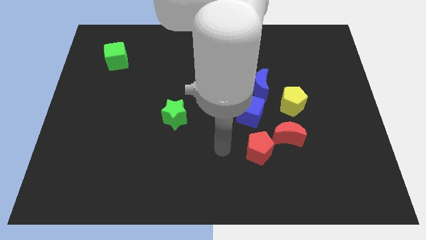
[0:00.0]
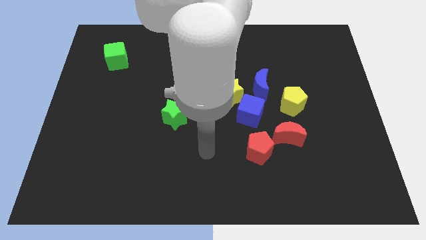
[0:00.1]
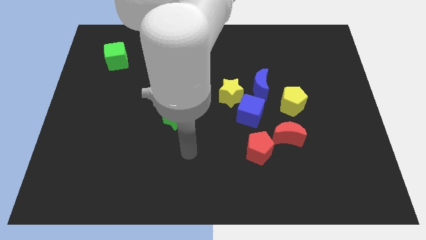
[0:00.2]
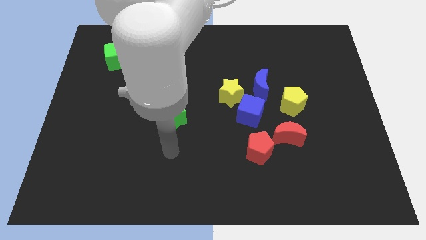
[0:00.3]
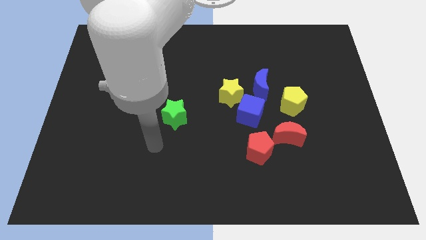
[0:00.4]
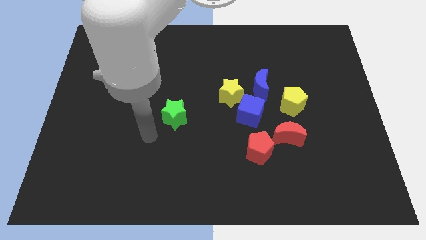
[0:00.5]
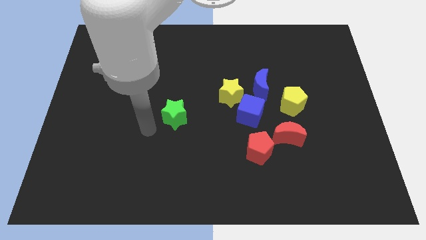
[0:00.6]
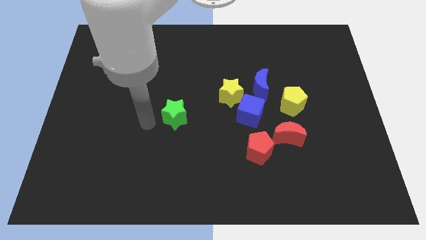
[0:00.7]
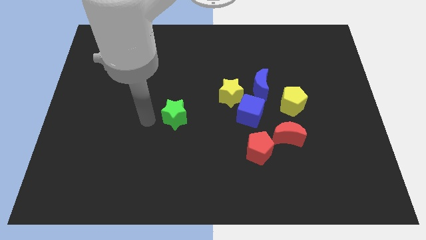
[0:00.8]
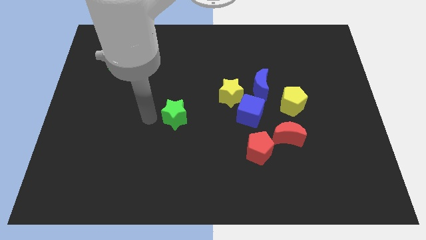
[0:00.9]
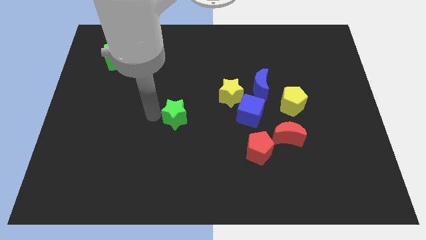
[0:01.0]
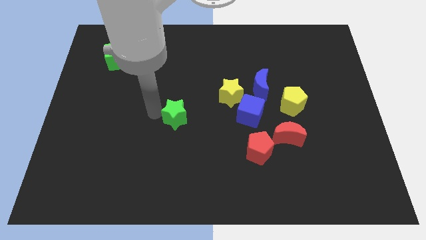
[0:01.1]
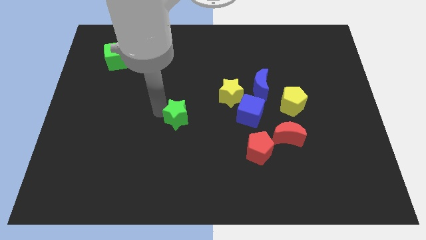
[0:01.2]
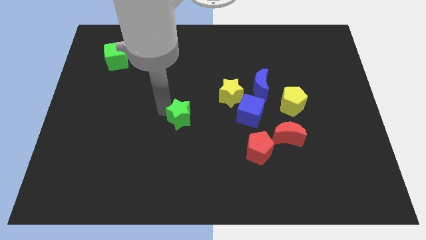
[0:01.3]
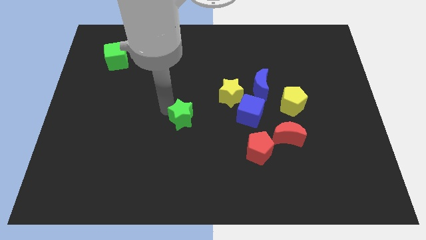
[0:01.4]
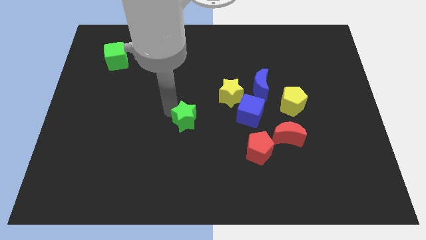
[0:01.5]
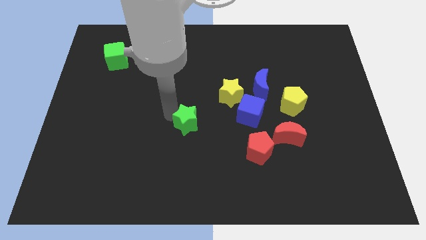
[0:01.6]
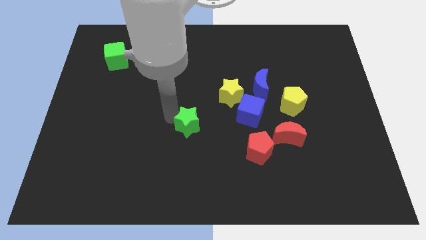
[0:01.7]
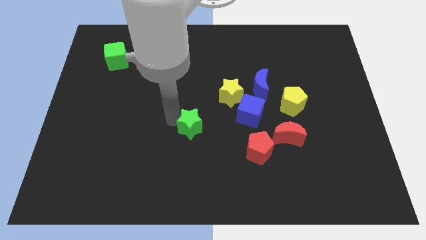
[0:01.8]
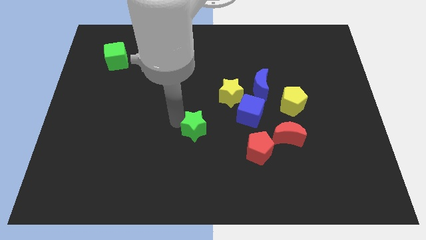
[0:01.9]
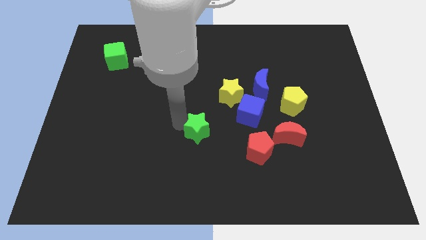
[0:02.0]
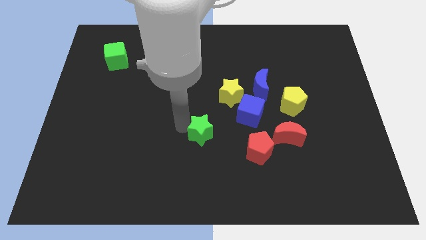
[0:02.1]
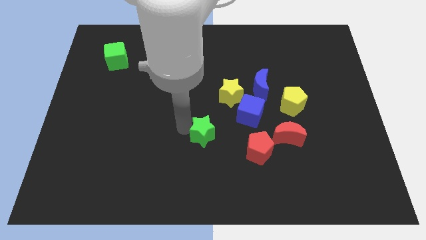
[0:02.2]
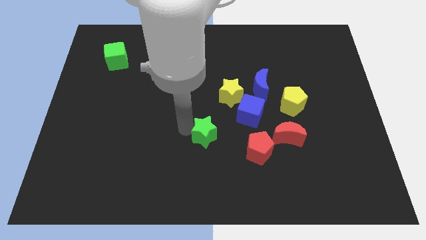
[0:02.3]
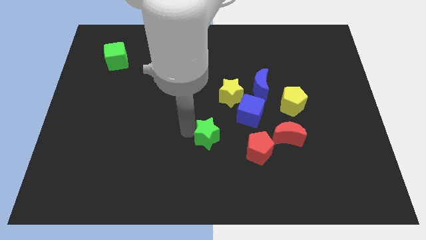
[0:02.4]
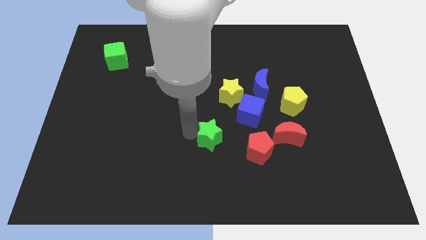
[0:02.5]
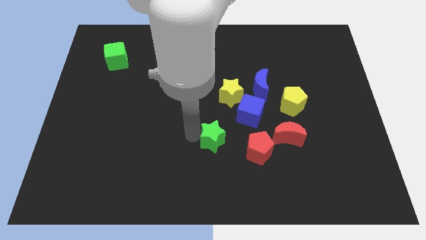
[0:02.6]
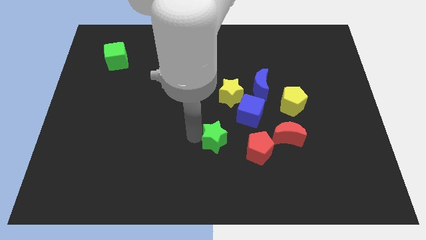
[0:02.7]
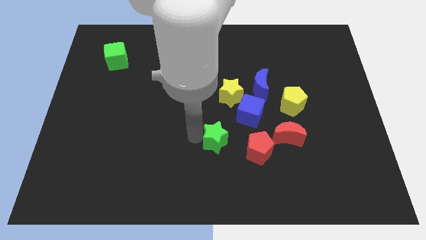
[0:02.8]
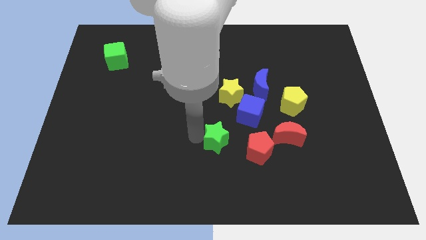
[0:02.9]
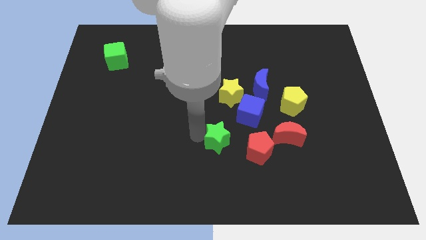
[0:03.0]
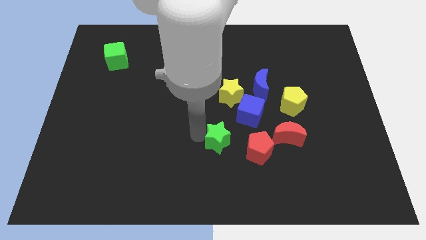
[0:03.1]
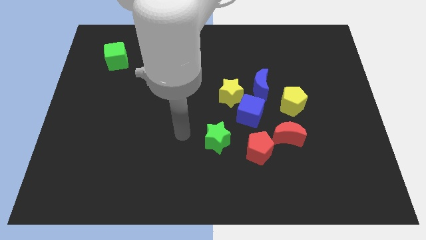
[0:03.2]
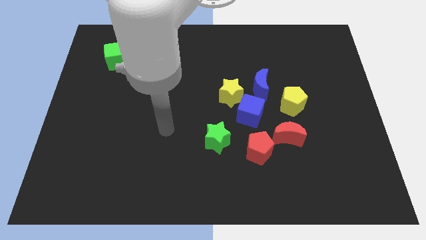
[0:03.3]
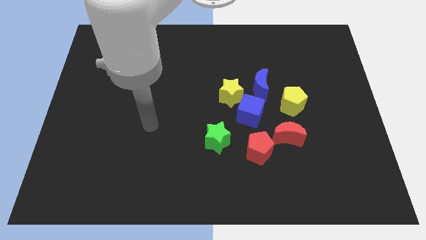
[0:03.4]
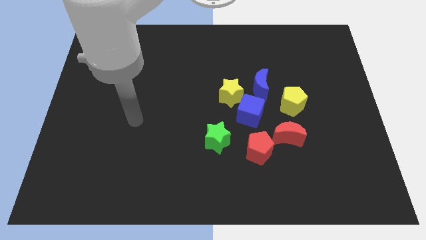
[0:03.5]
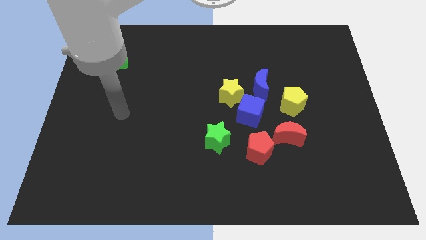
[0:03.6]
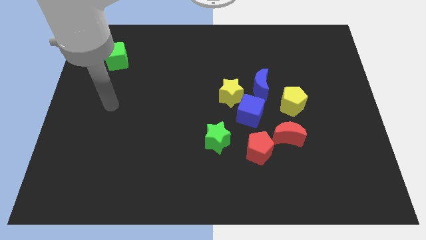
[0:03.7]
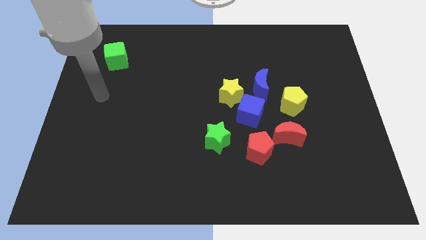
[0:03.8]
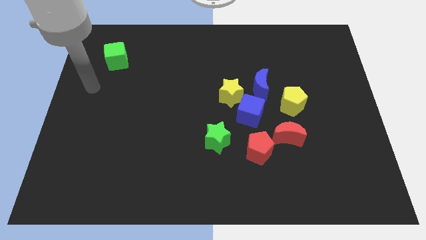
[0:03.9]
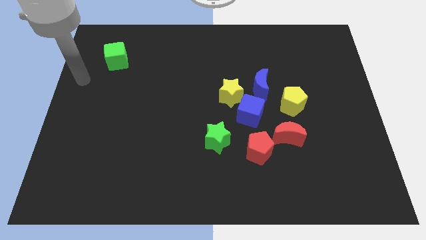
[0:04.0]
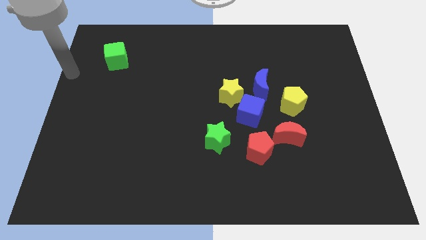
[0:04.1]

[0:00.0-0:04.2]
push the green star left to the blue cube

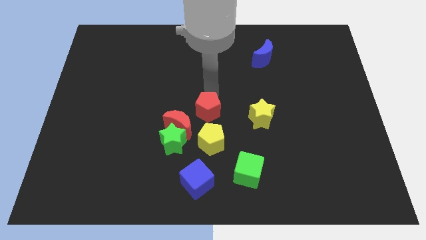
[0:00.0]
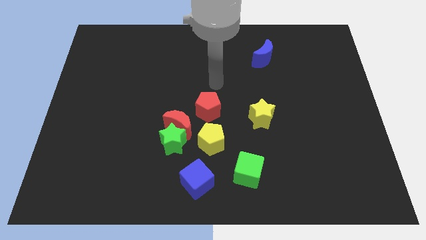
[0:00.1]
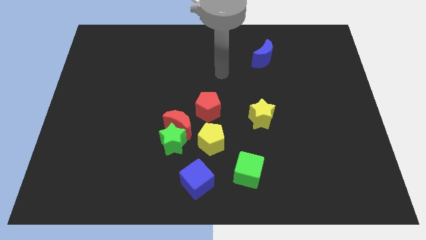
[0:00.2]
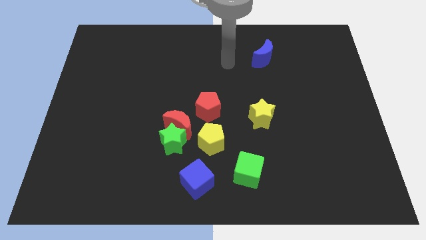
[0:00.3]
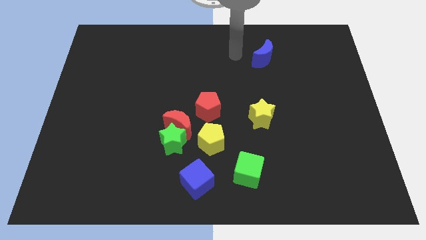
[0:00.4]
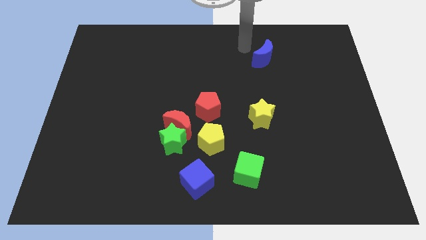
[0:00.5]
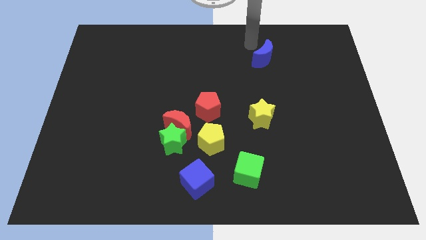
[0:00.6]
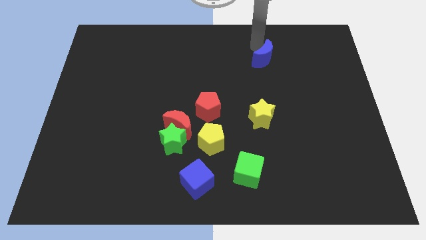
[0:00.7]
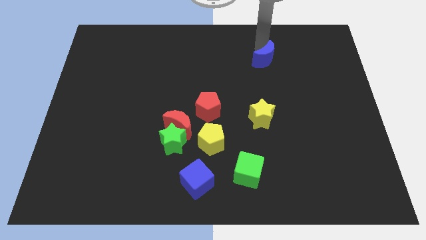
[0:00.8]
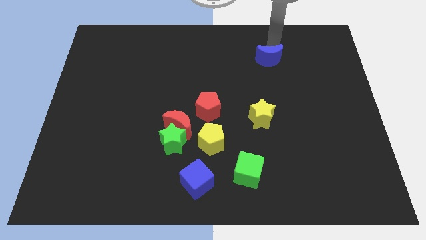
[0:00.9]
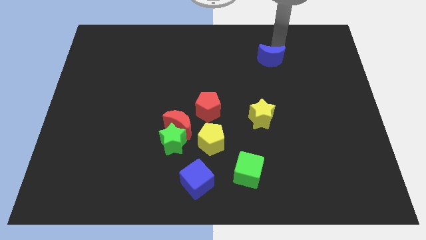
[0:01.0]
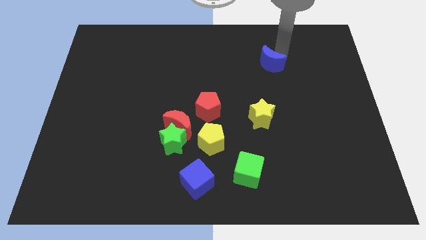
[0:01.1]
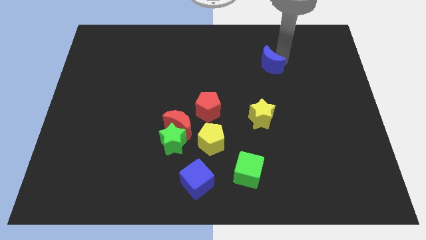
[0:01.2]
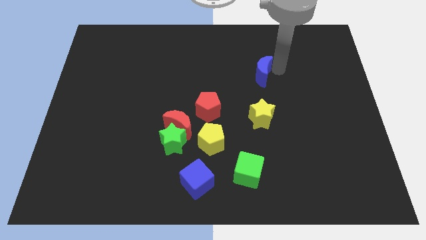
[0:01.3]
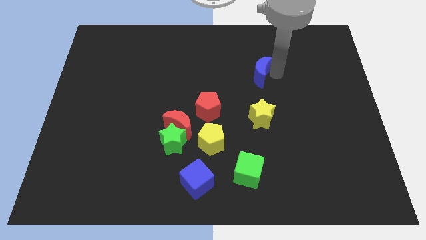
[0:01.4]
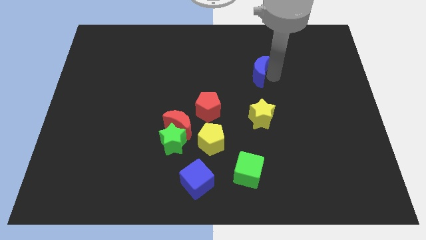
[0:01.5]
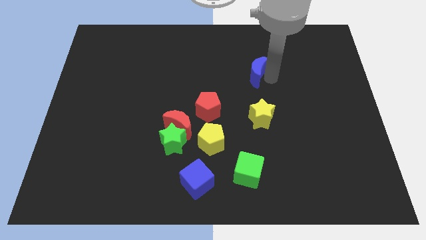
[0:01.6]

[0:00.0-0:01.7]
push the blue moon closer to the yellow star

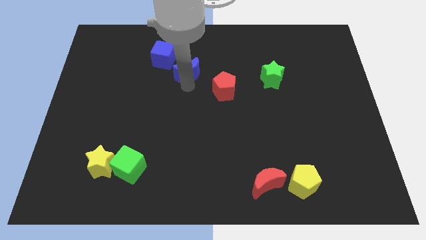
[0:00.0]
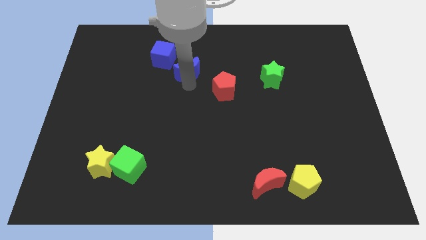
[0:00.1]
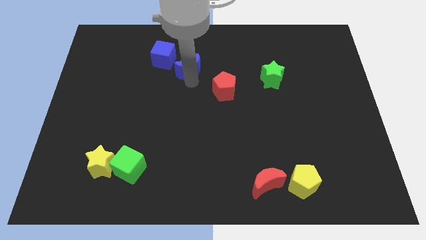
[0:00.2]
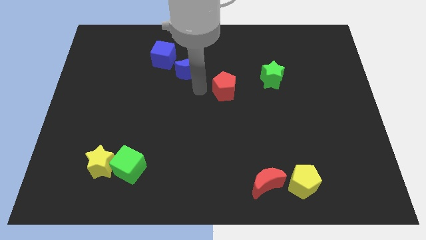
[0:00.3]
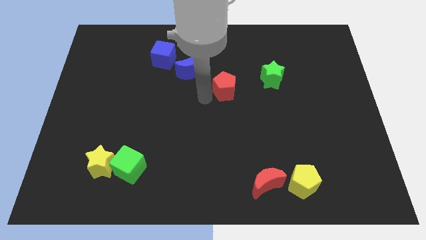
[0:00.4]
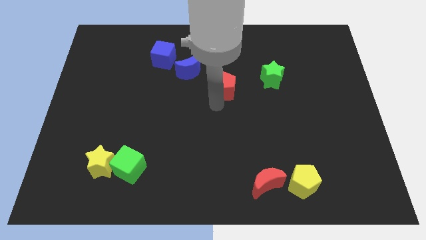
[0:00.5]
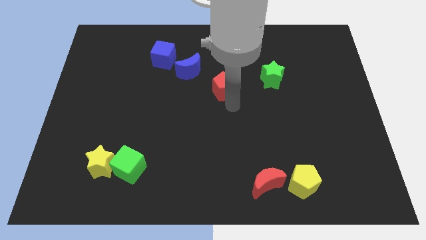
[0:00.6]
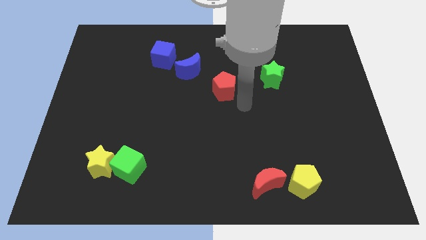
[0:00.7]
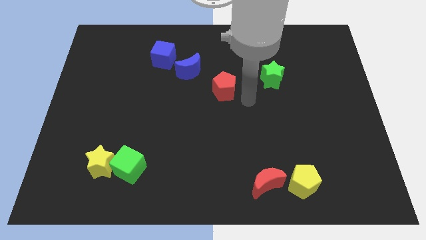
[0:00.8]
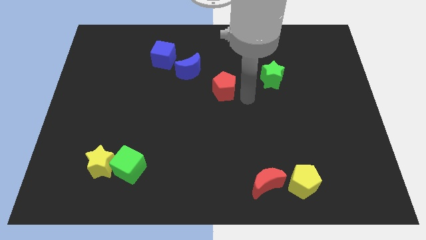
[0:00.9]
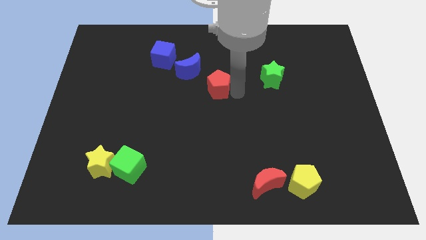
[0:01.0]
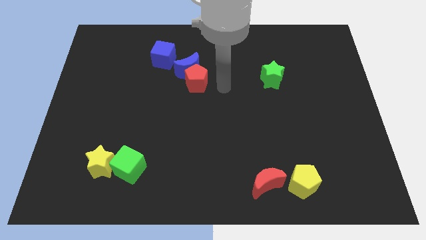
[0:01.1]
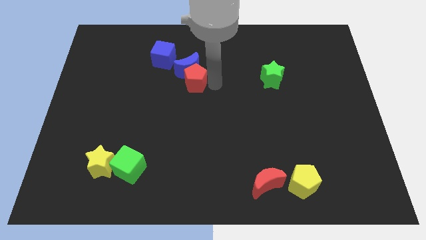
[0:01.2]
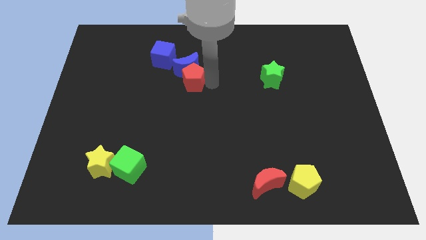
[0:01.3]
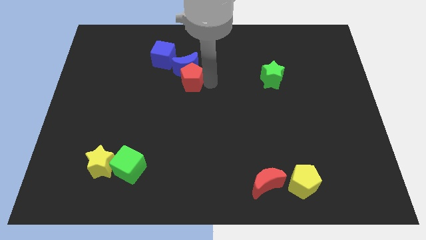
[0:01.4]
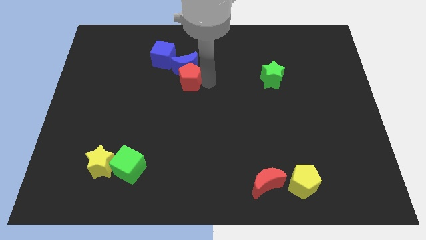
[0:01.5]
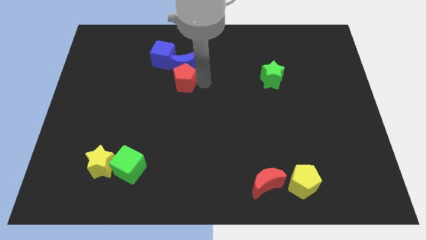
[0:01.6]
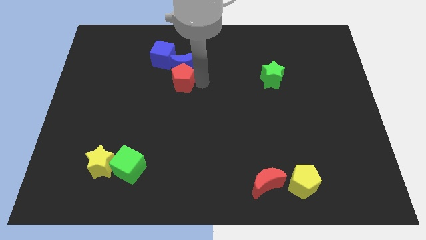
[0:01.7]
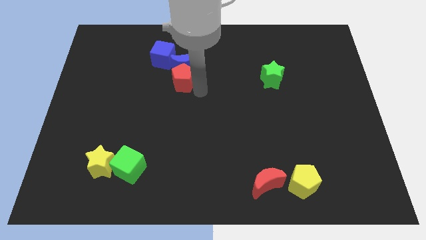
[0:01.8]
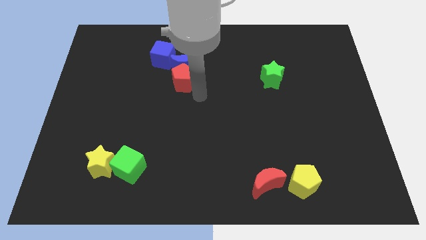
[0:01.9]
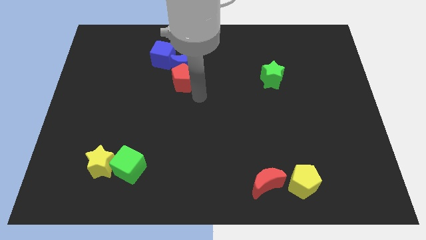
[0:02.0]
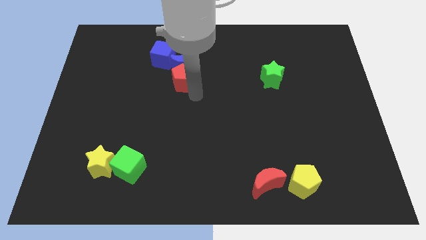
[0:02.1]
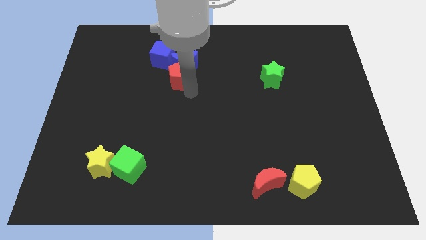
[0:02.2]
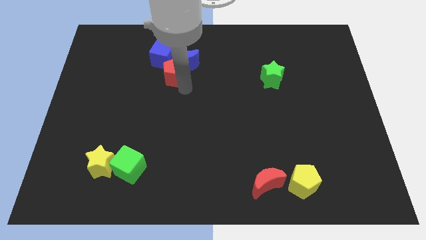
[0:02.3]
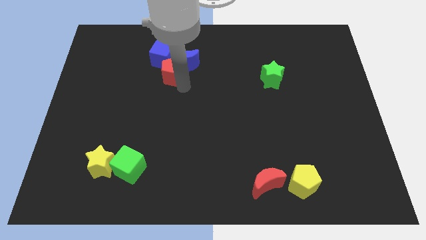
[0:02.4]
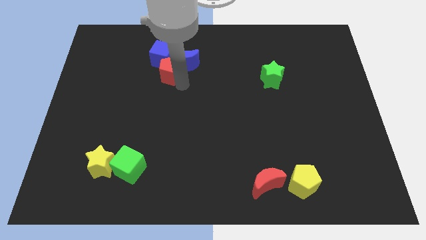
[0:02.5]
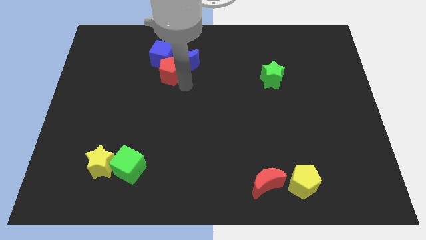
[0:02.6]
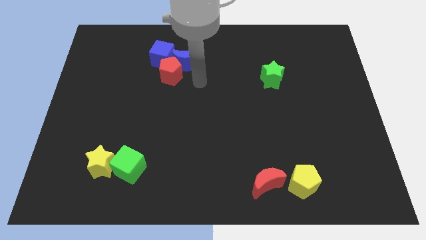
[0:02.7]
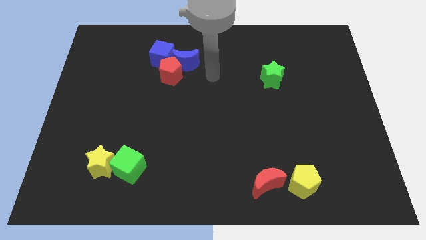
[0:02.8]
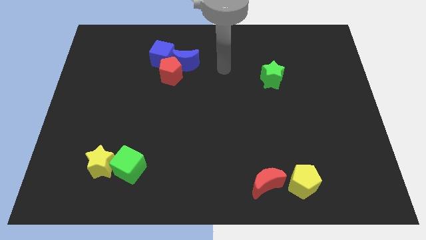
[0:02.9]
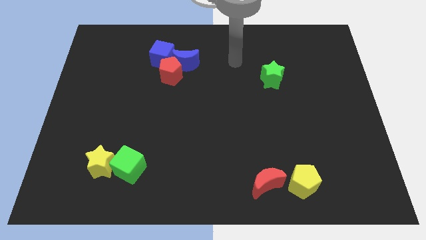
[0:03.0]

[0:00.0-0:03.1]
group up the blue crescent and red pentagon with the blue cube at the top side of the board
